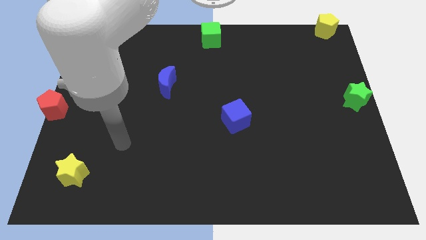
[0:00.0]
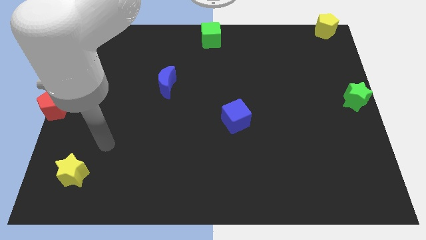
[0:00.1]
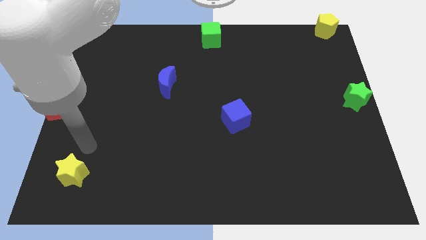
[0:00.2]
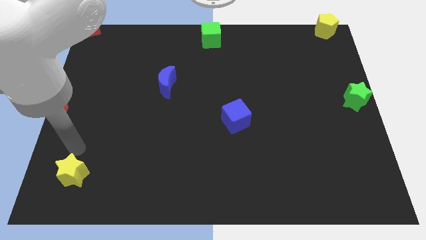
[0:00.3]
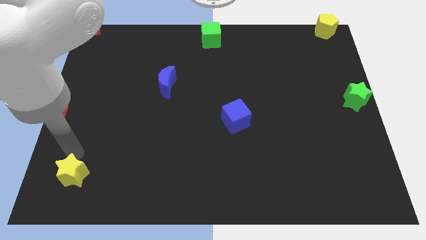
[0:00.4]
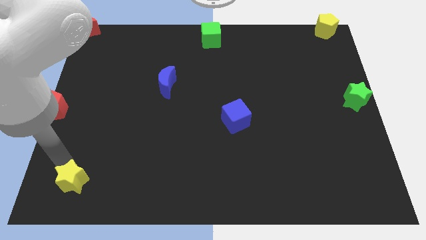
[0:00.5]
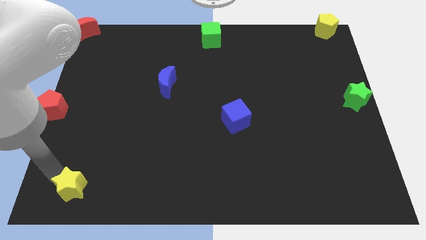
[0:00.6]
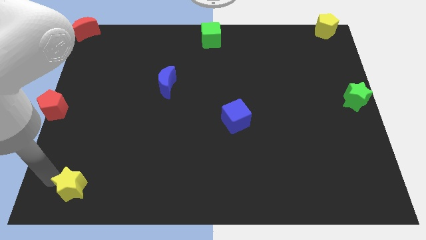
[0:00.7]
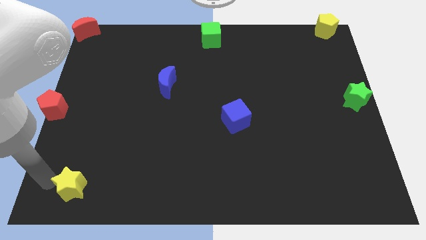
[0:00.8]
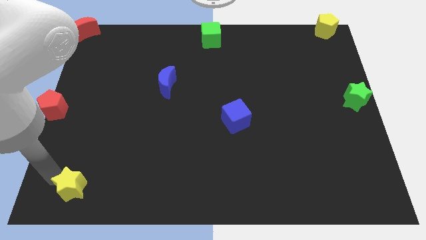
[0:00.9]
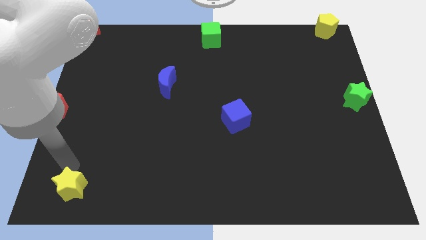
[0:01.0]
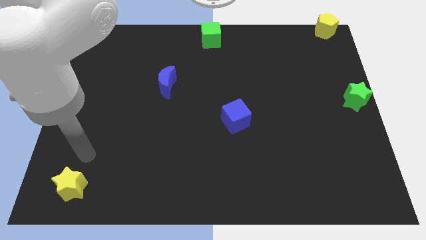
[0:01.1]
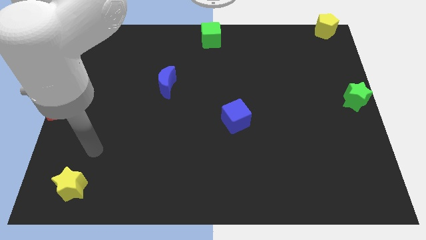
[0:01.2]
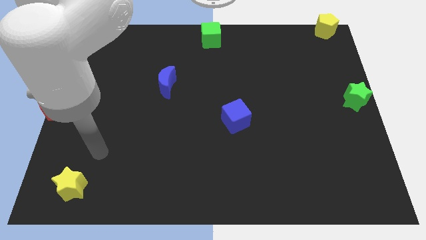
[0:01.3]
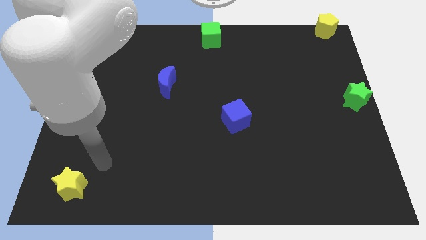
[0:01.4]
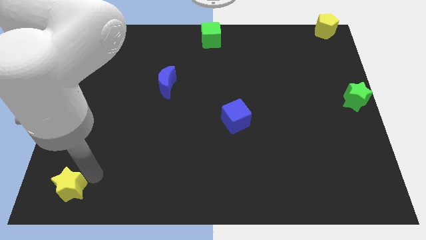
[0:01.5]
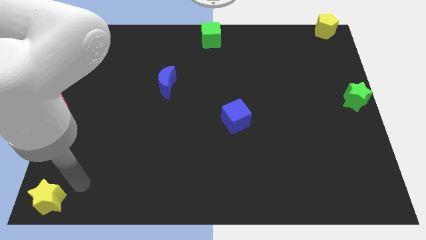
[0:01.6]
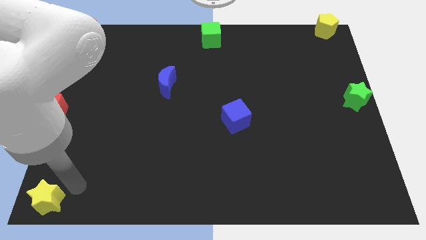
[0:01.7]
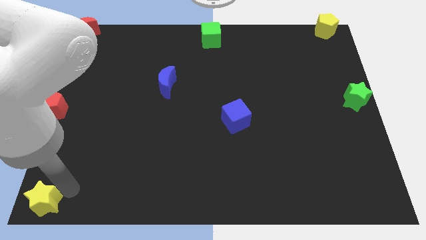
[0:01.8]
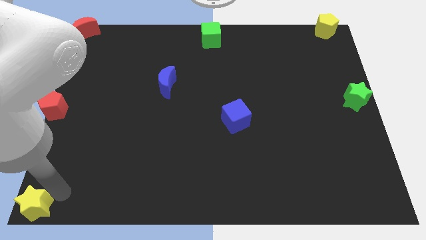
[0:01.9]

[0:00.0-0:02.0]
place the yellow star to the bottom left corner

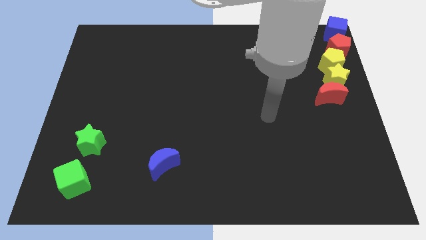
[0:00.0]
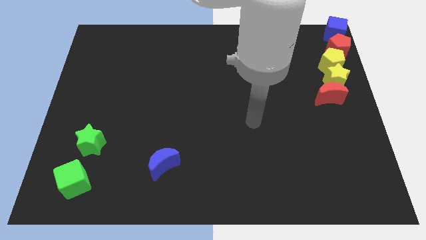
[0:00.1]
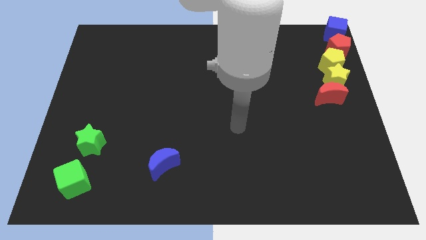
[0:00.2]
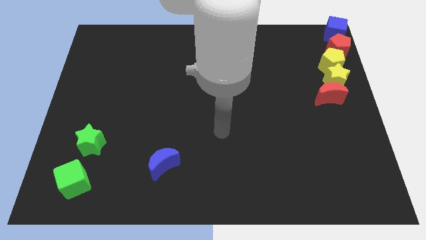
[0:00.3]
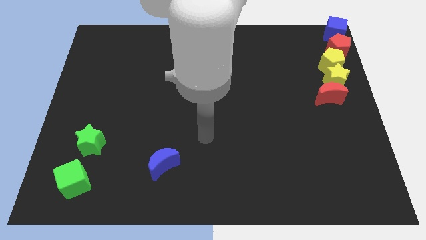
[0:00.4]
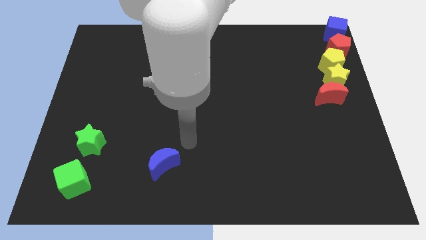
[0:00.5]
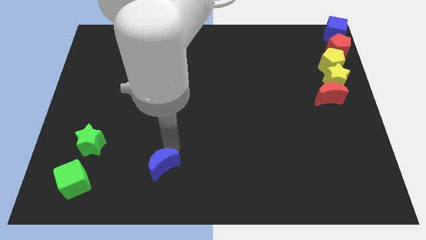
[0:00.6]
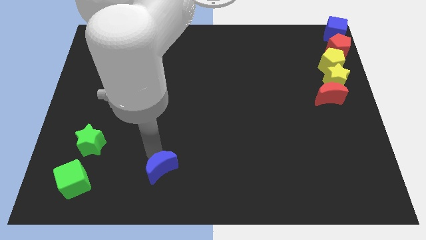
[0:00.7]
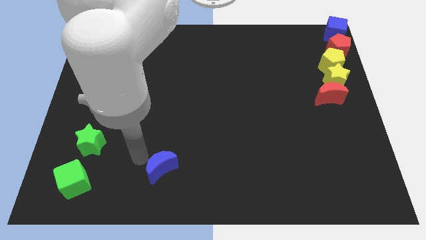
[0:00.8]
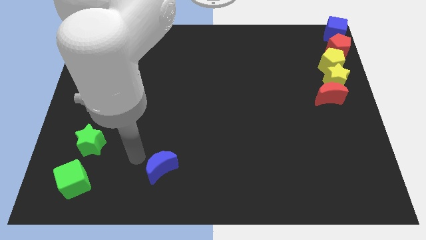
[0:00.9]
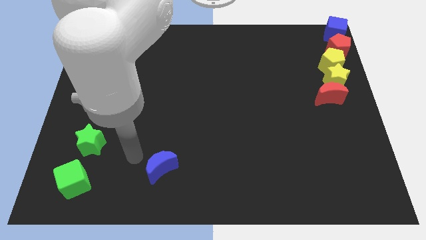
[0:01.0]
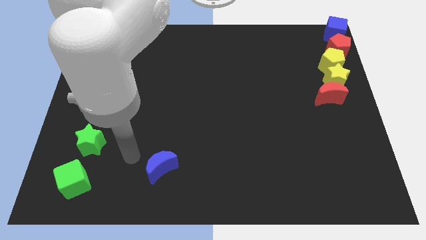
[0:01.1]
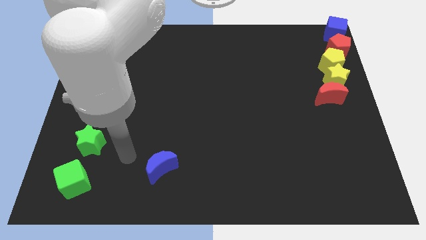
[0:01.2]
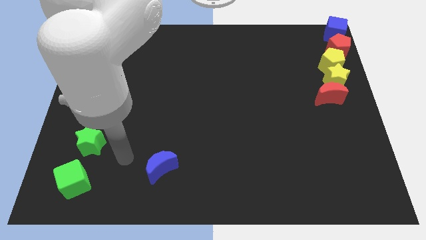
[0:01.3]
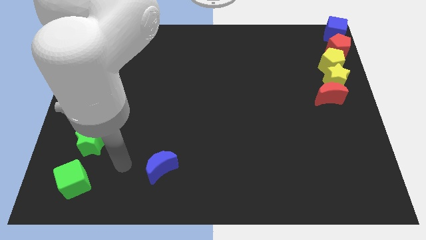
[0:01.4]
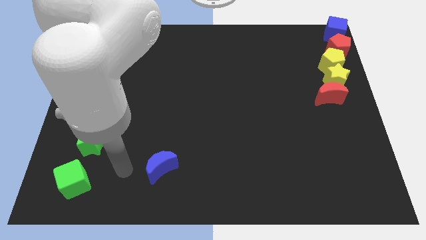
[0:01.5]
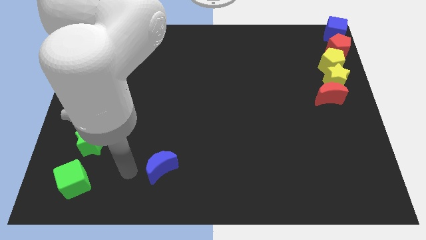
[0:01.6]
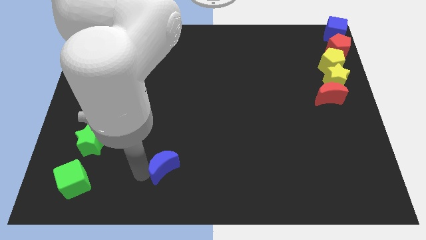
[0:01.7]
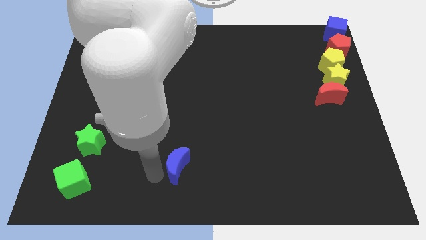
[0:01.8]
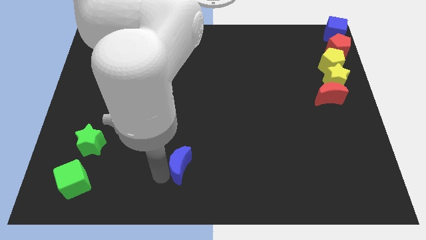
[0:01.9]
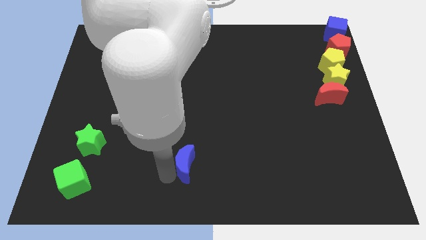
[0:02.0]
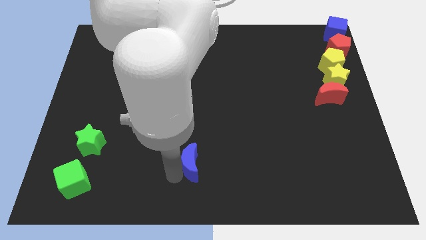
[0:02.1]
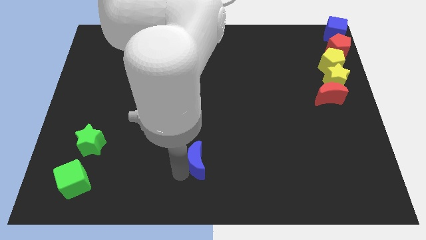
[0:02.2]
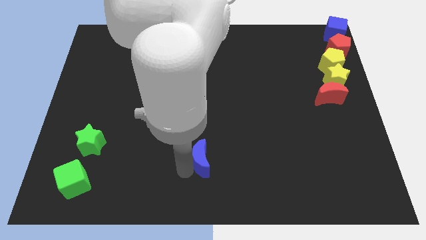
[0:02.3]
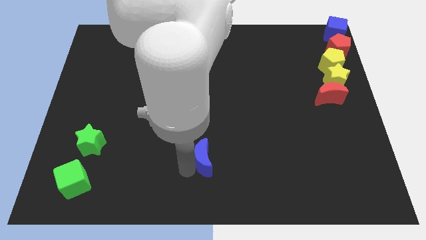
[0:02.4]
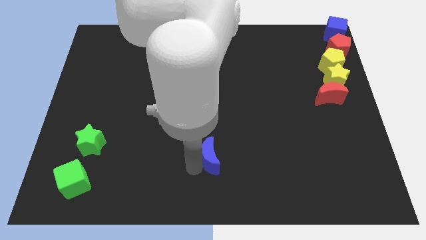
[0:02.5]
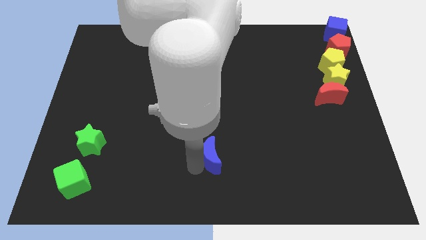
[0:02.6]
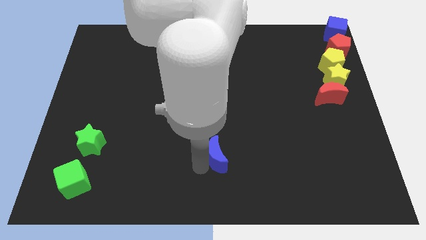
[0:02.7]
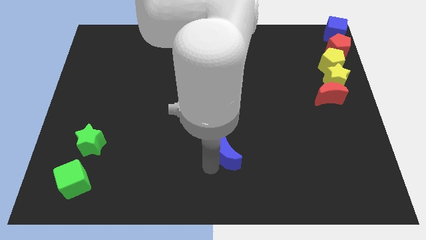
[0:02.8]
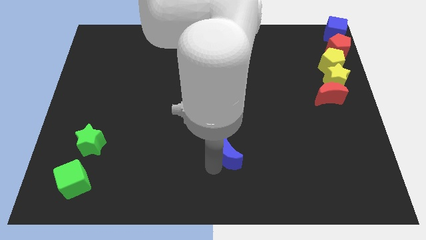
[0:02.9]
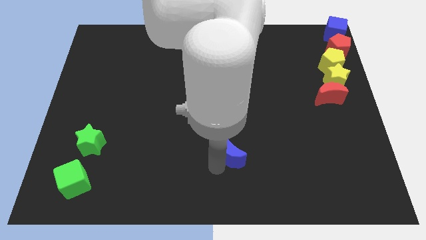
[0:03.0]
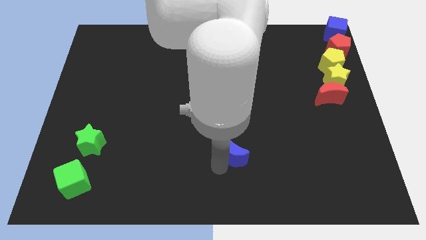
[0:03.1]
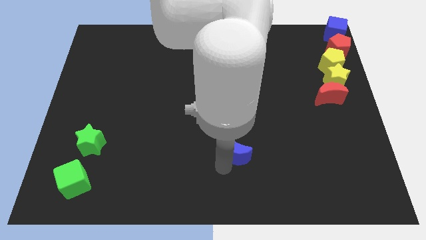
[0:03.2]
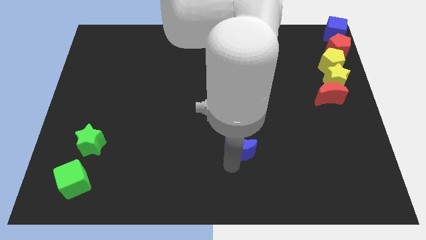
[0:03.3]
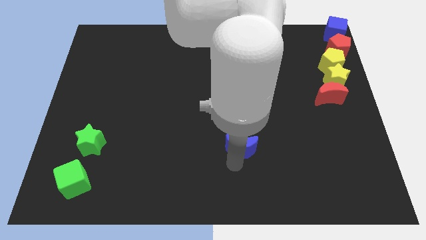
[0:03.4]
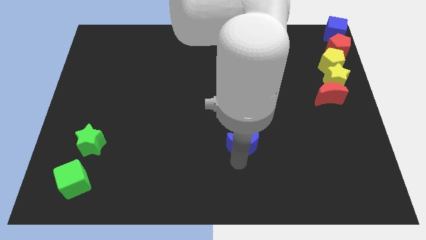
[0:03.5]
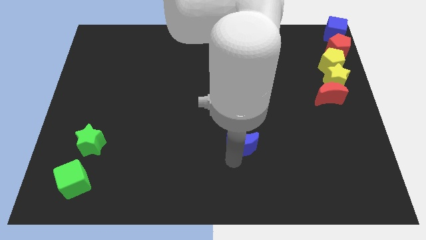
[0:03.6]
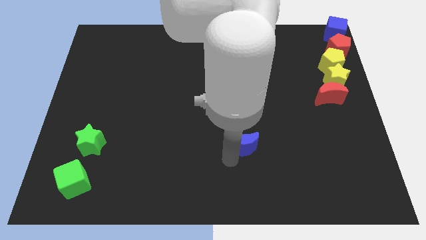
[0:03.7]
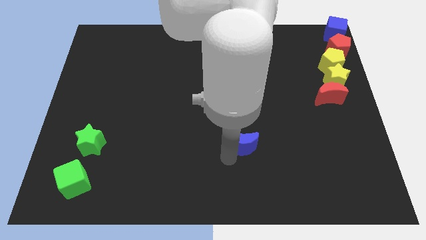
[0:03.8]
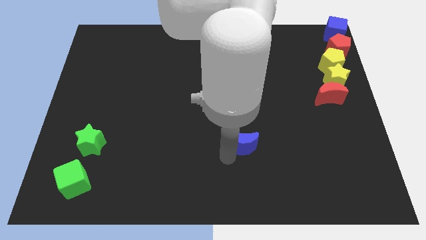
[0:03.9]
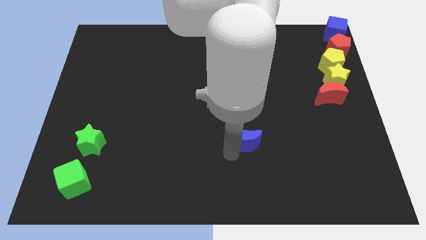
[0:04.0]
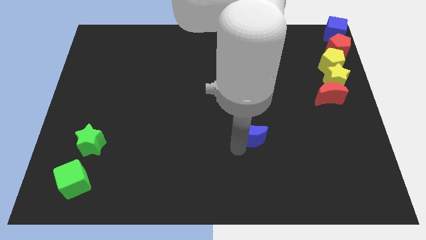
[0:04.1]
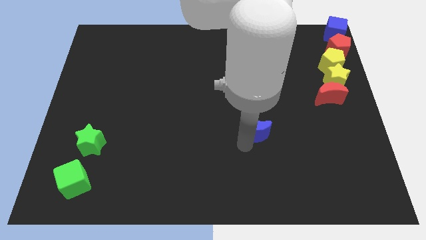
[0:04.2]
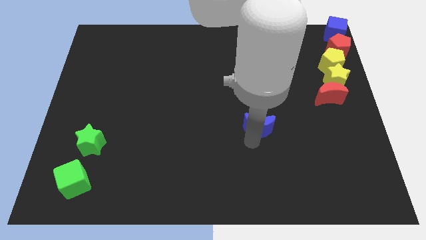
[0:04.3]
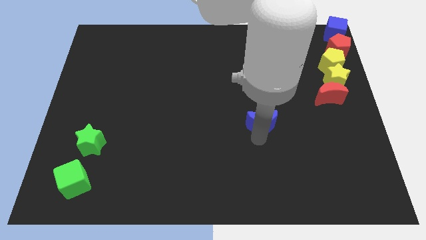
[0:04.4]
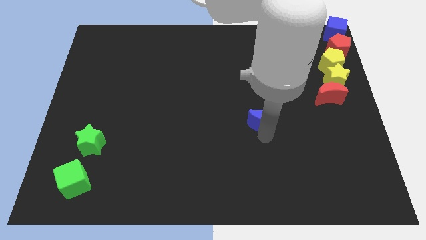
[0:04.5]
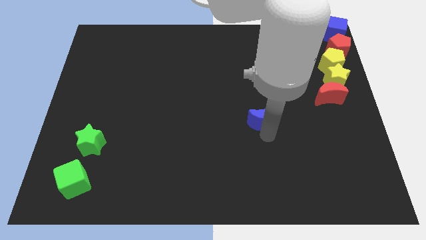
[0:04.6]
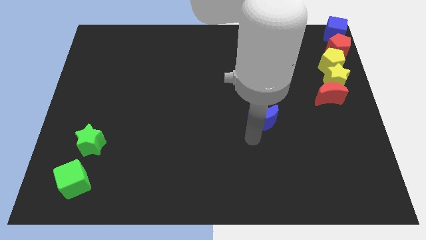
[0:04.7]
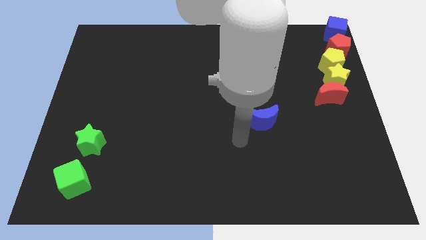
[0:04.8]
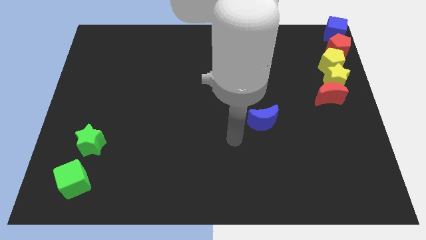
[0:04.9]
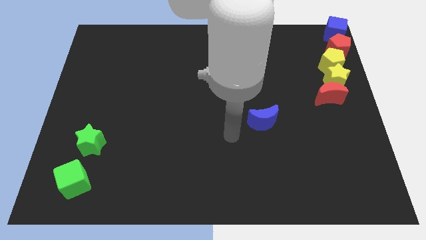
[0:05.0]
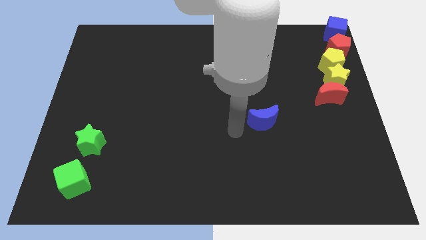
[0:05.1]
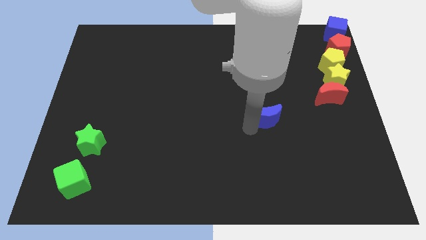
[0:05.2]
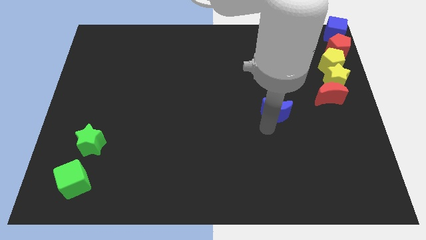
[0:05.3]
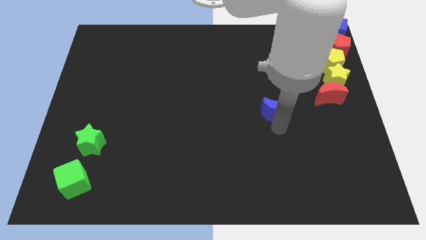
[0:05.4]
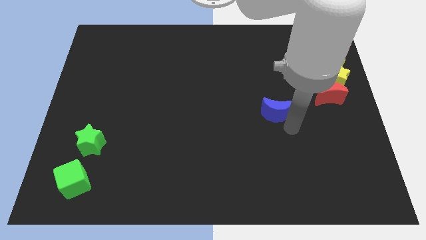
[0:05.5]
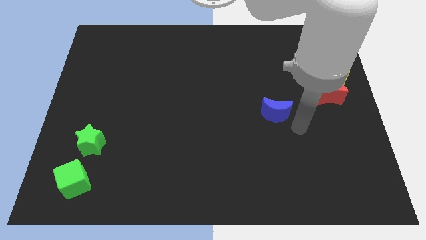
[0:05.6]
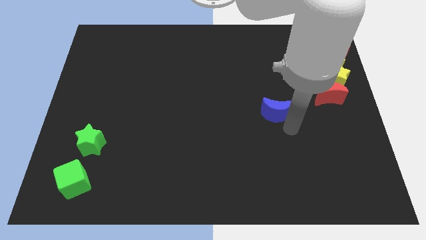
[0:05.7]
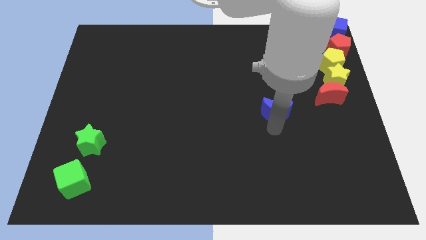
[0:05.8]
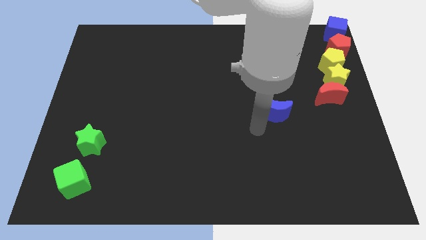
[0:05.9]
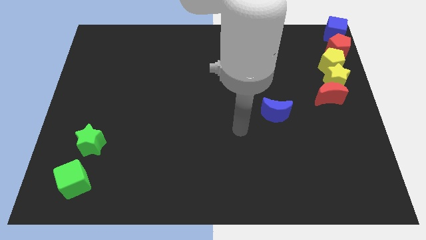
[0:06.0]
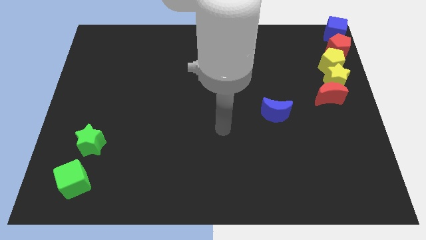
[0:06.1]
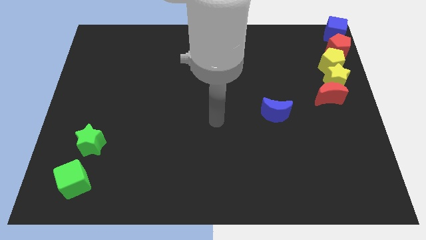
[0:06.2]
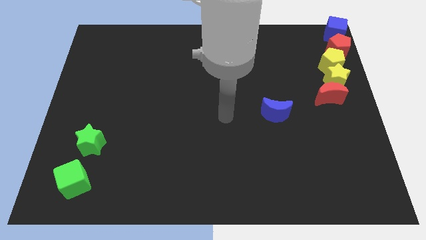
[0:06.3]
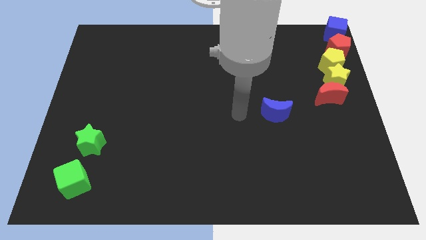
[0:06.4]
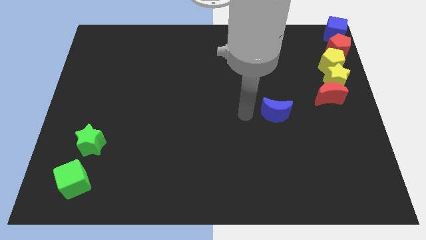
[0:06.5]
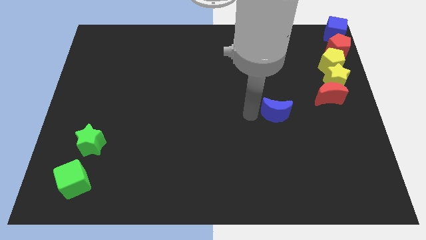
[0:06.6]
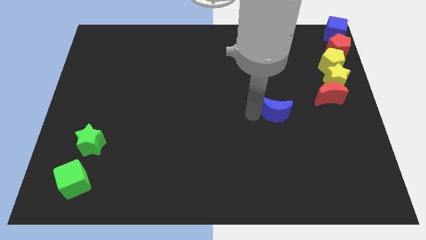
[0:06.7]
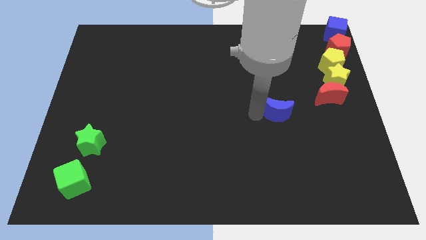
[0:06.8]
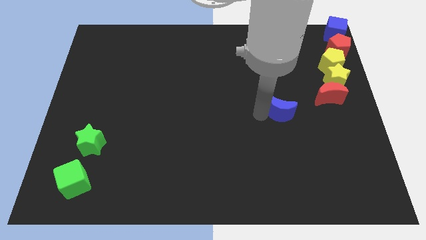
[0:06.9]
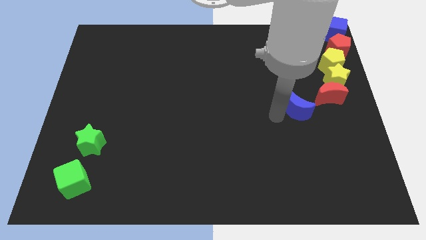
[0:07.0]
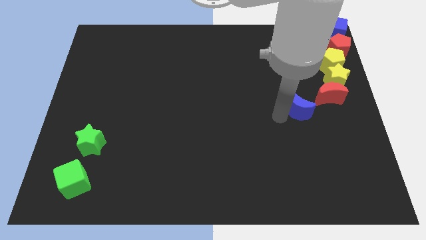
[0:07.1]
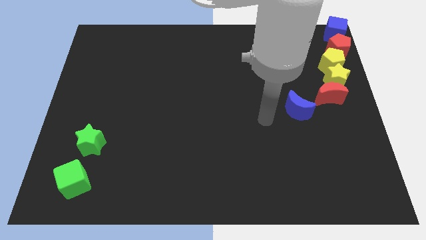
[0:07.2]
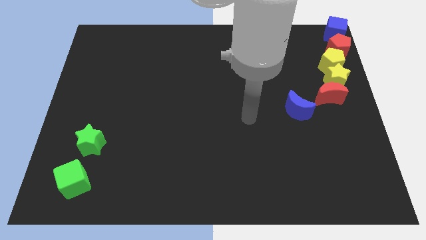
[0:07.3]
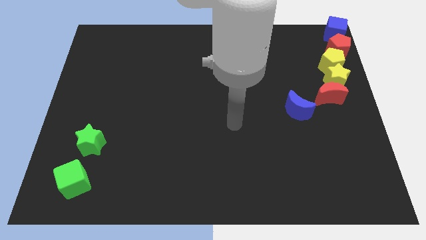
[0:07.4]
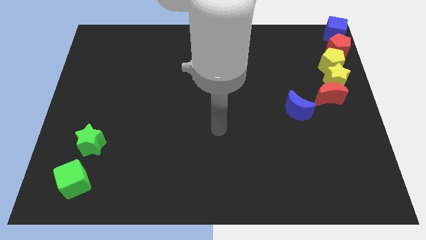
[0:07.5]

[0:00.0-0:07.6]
place the blue crescent at the bottom left side of red crescent
